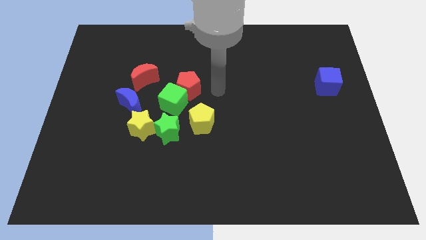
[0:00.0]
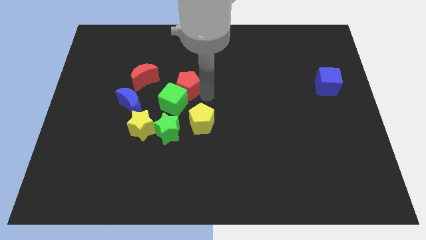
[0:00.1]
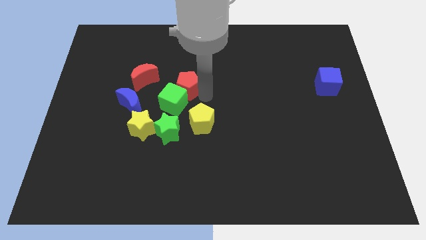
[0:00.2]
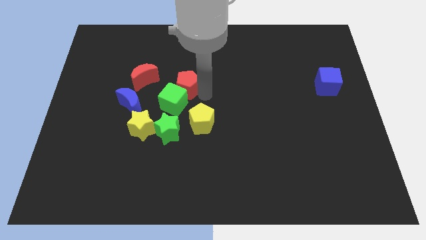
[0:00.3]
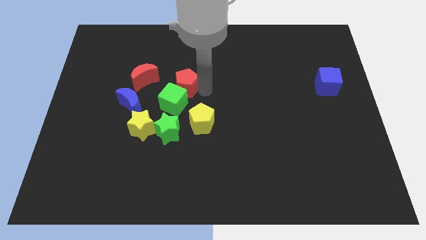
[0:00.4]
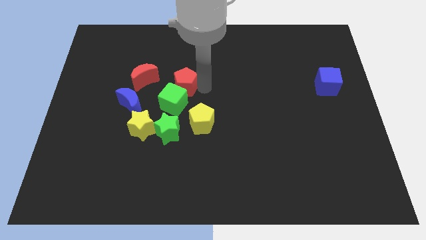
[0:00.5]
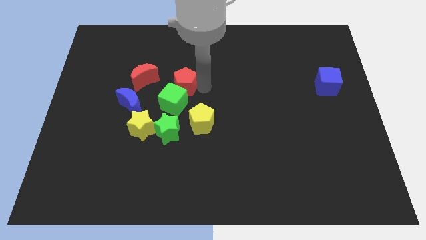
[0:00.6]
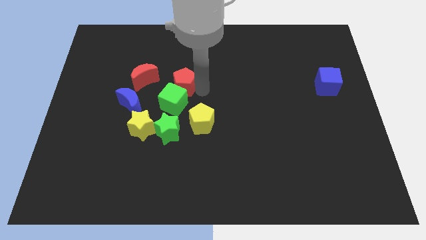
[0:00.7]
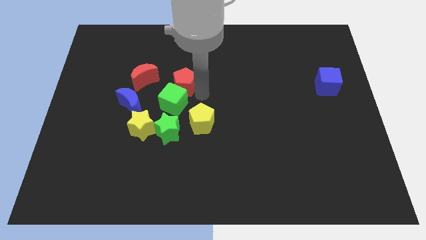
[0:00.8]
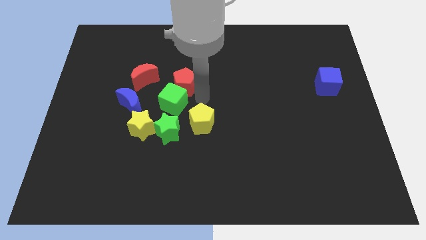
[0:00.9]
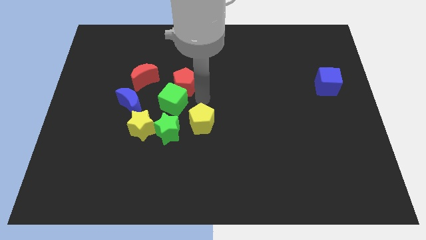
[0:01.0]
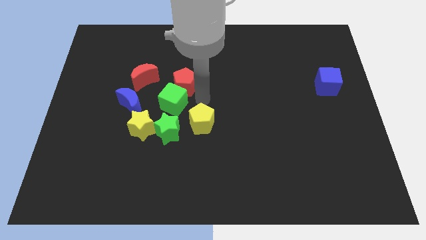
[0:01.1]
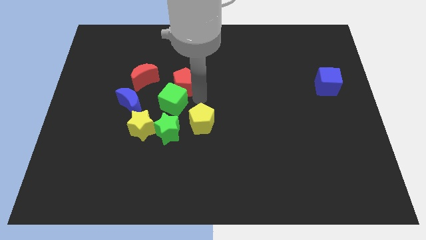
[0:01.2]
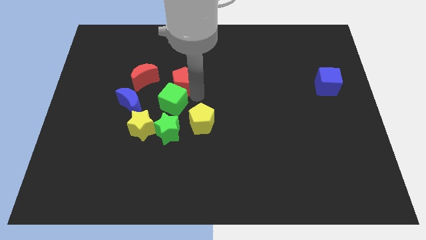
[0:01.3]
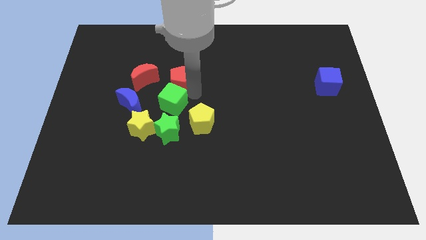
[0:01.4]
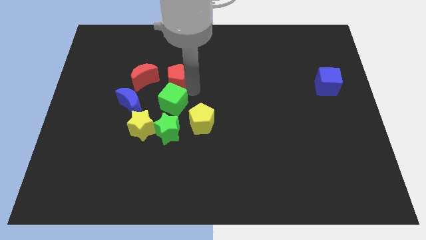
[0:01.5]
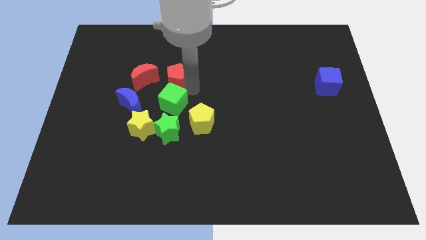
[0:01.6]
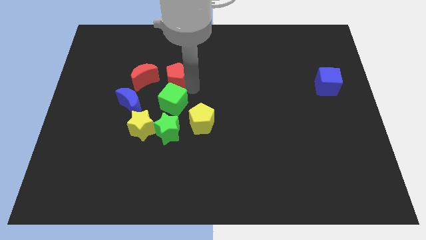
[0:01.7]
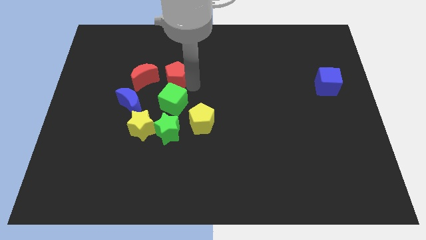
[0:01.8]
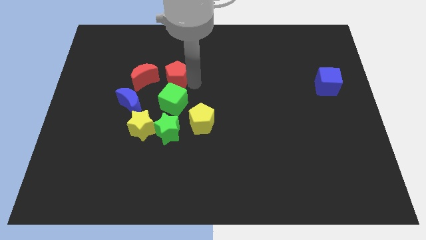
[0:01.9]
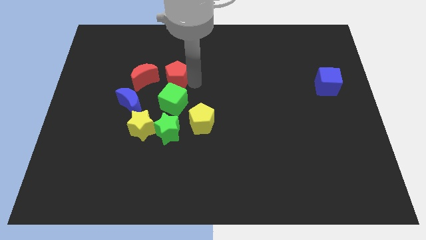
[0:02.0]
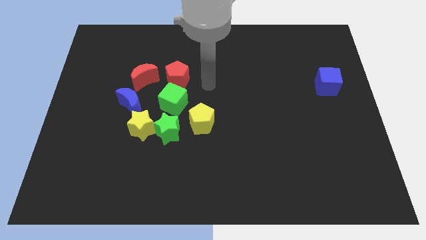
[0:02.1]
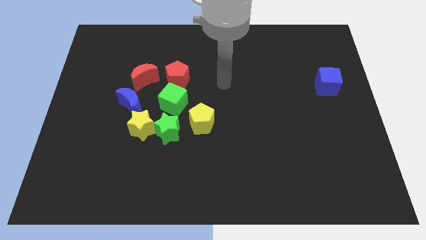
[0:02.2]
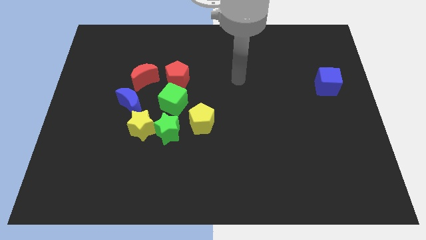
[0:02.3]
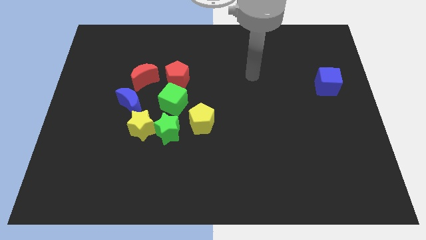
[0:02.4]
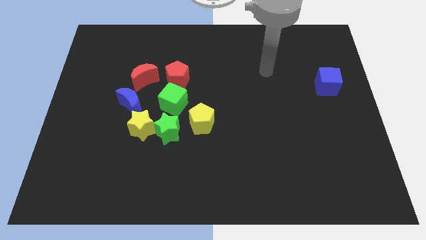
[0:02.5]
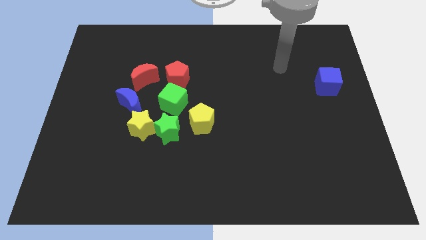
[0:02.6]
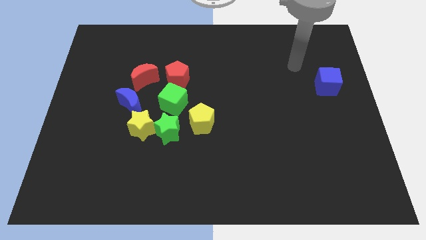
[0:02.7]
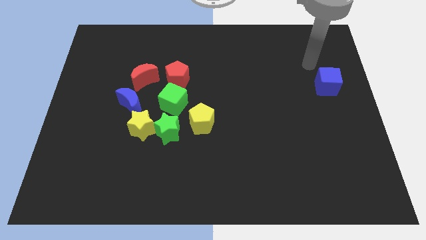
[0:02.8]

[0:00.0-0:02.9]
move the red pentagon towards the right side of red moon

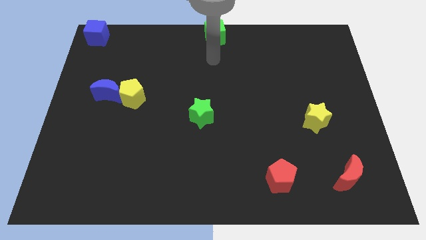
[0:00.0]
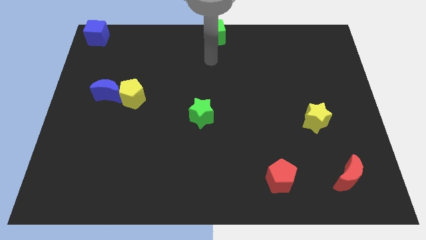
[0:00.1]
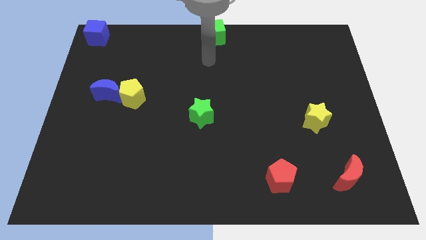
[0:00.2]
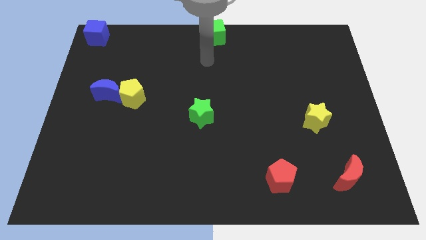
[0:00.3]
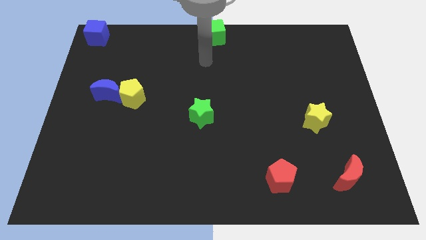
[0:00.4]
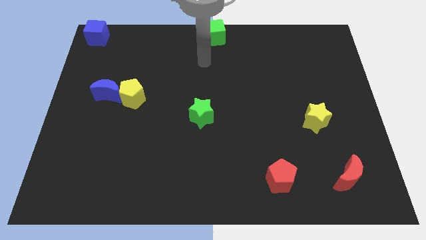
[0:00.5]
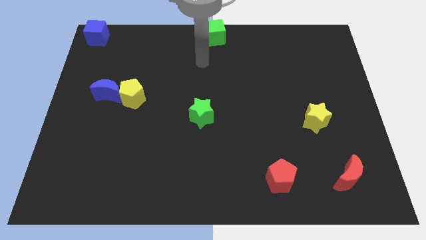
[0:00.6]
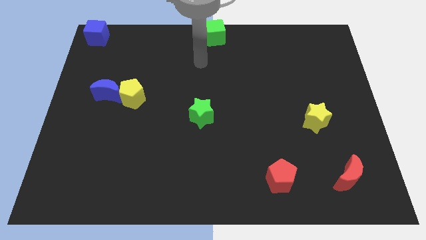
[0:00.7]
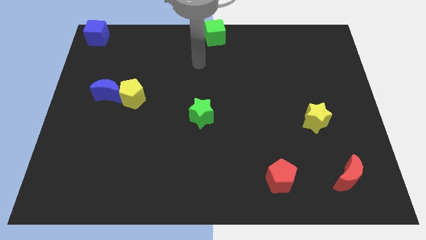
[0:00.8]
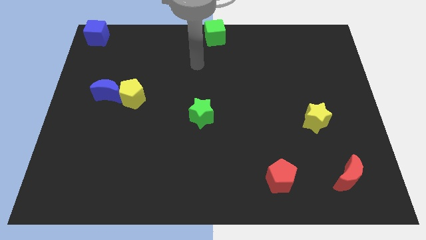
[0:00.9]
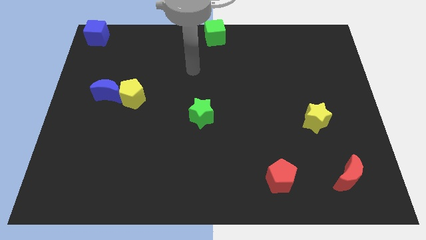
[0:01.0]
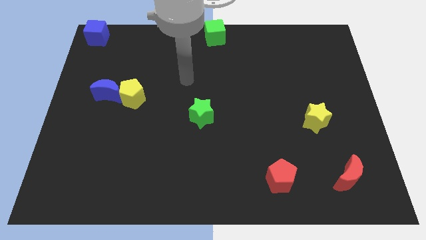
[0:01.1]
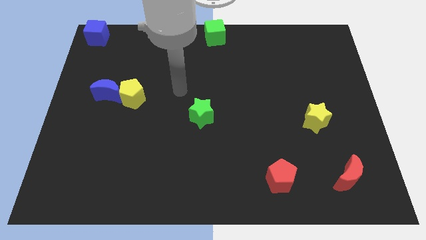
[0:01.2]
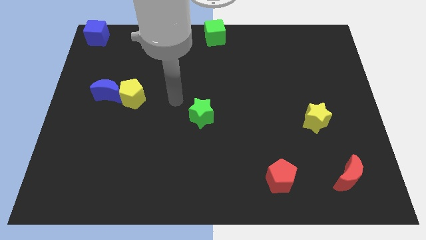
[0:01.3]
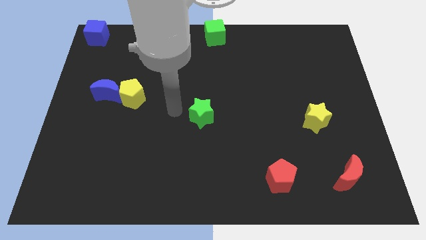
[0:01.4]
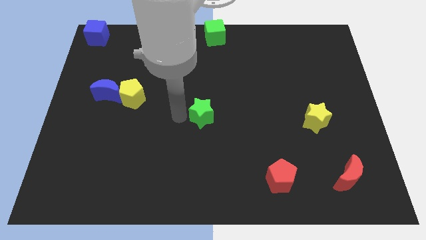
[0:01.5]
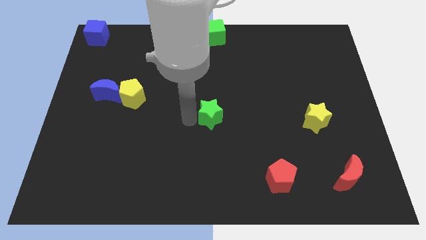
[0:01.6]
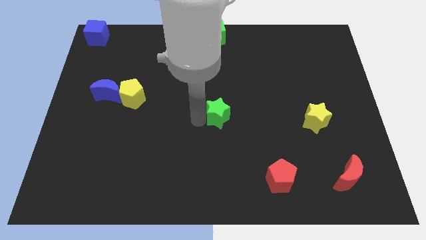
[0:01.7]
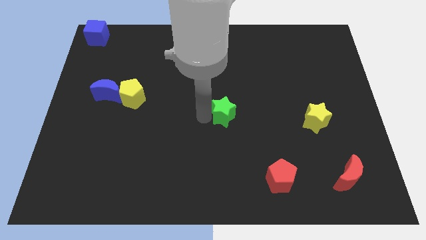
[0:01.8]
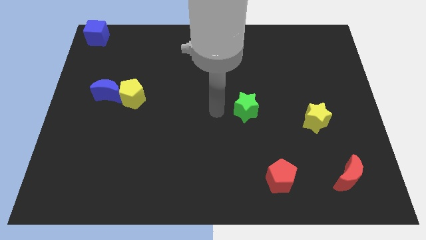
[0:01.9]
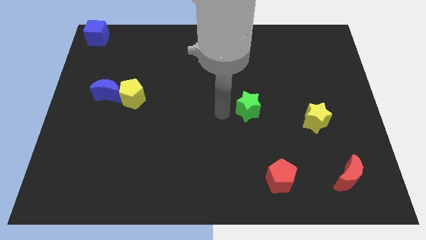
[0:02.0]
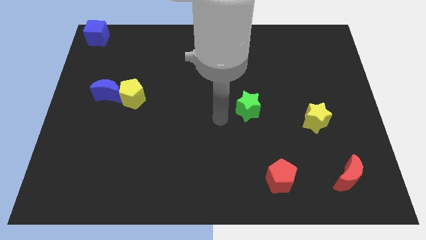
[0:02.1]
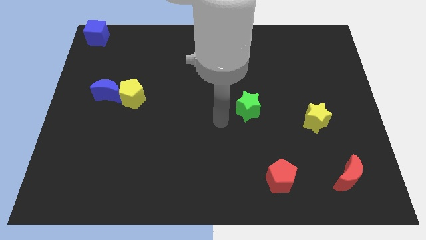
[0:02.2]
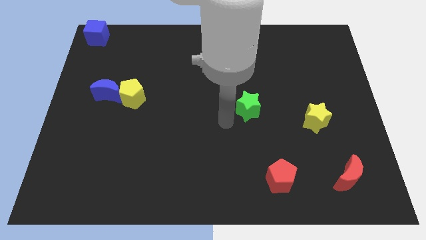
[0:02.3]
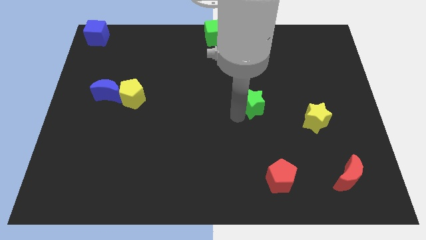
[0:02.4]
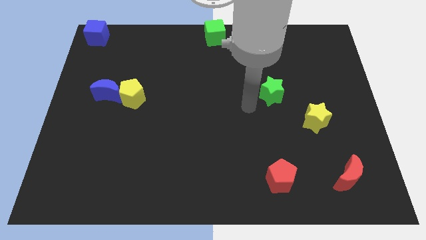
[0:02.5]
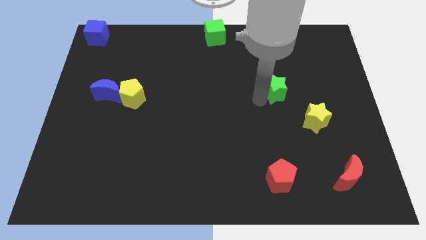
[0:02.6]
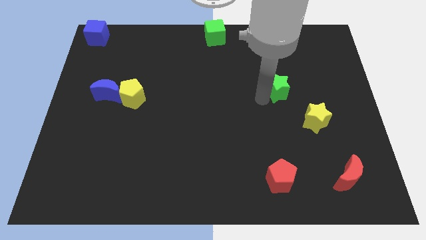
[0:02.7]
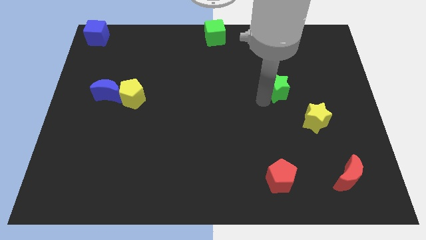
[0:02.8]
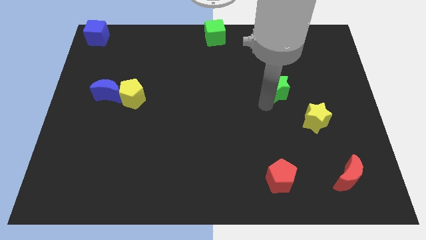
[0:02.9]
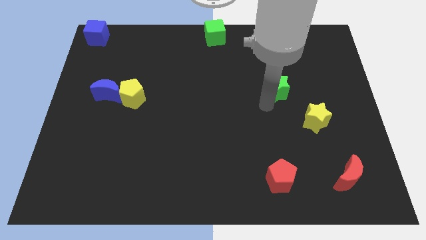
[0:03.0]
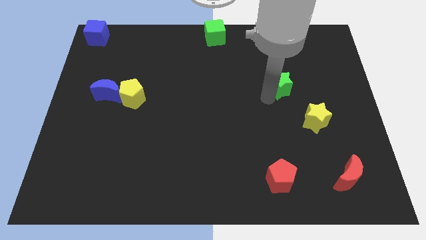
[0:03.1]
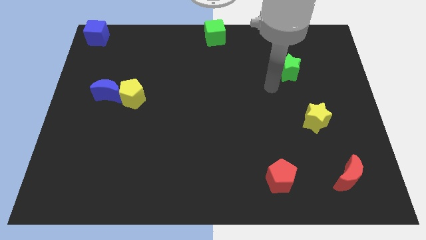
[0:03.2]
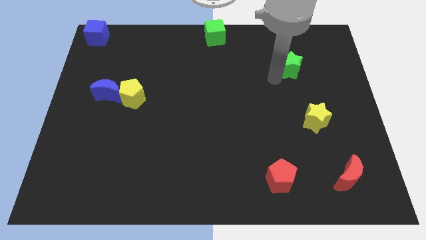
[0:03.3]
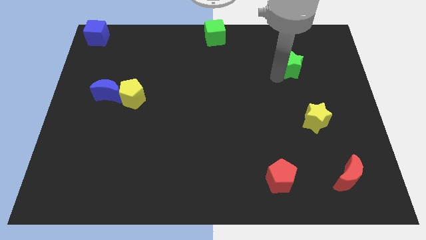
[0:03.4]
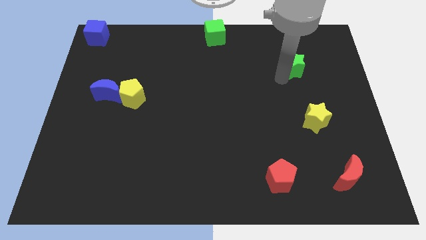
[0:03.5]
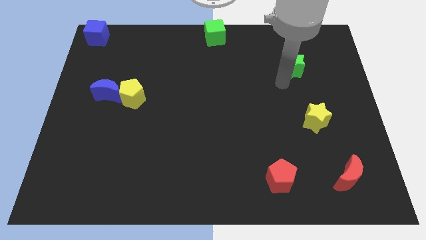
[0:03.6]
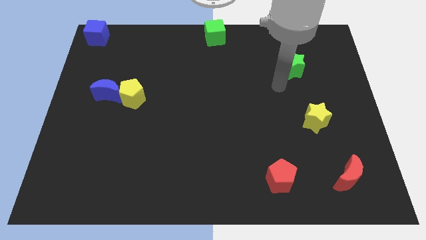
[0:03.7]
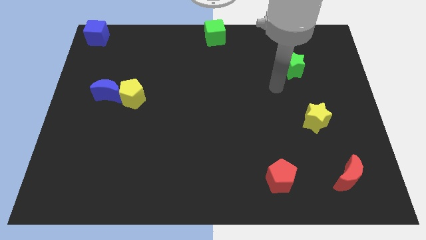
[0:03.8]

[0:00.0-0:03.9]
move the green star at the top right of the green cube

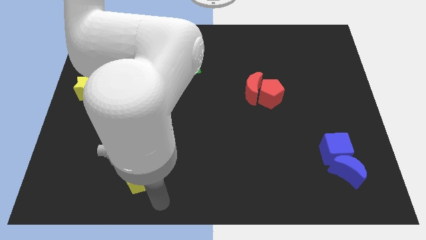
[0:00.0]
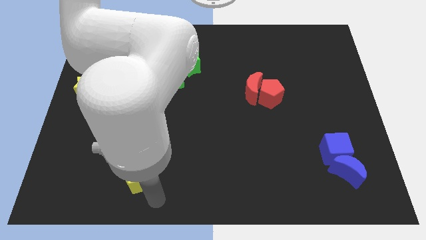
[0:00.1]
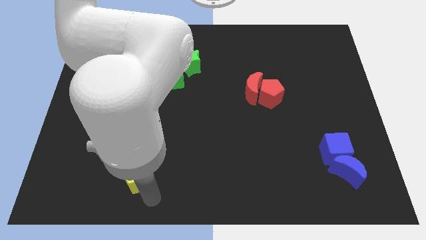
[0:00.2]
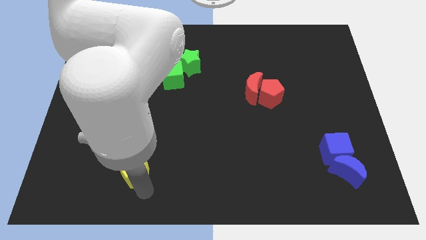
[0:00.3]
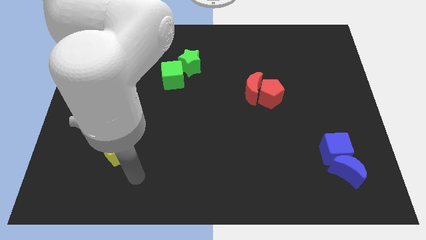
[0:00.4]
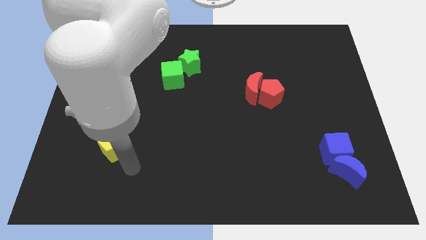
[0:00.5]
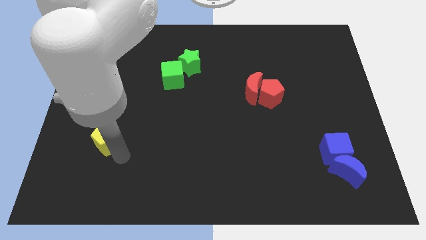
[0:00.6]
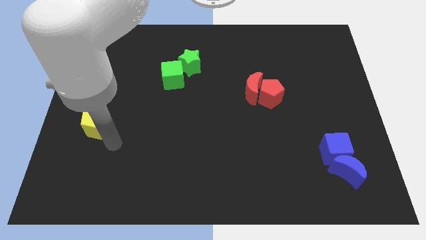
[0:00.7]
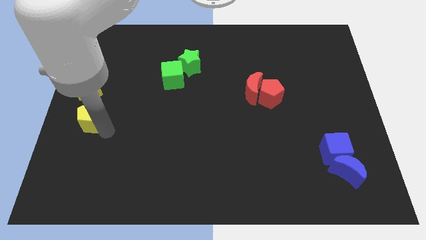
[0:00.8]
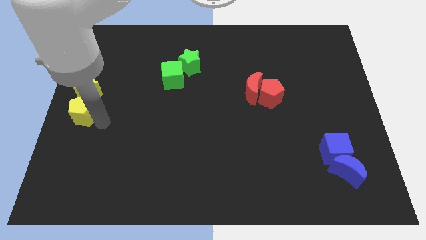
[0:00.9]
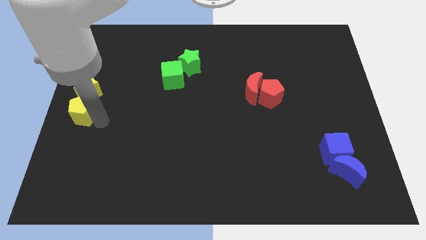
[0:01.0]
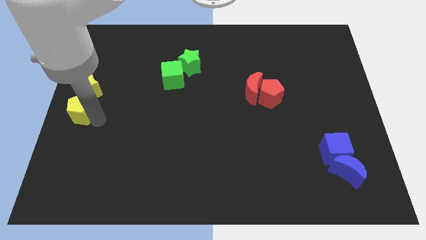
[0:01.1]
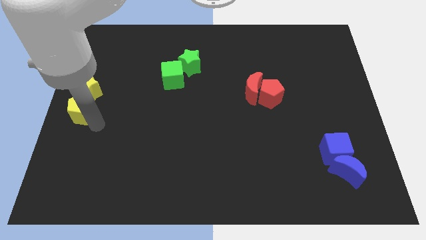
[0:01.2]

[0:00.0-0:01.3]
move the yellow pentagon to the bottom of the yellow star

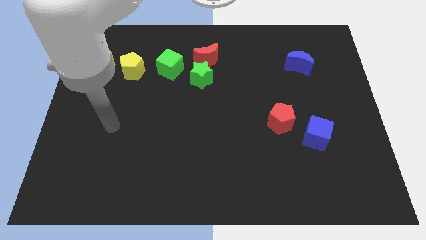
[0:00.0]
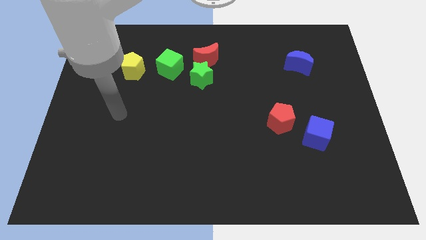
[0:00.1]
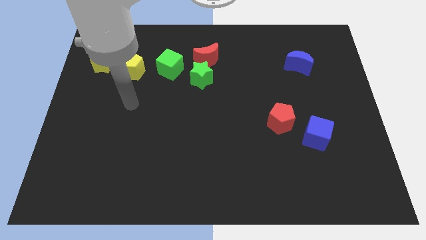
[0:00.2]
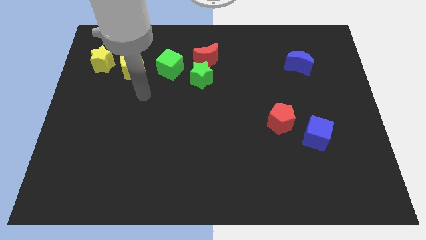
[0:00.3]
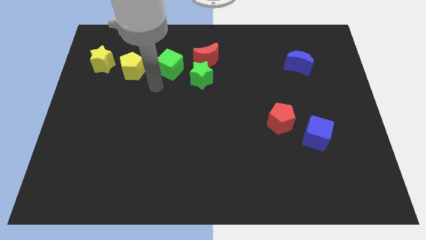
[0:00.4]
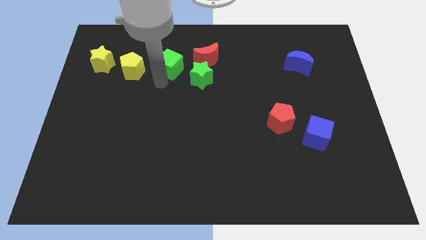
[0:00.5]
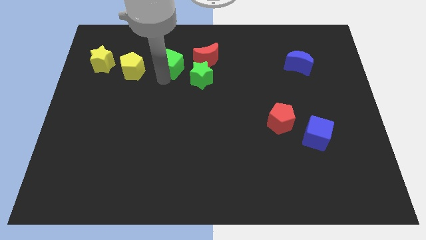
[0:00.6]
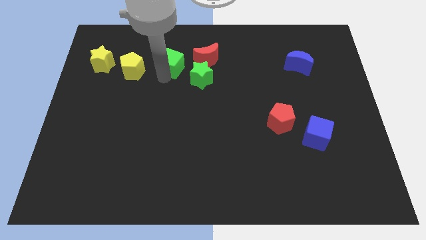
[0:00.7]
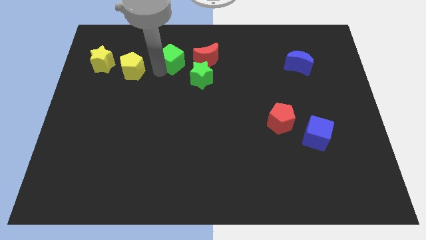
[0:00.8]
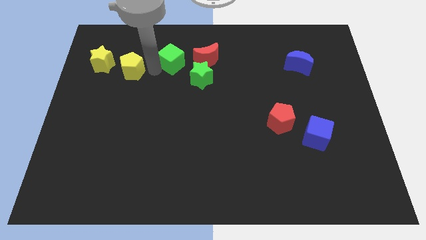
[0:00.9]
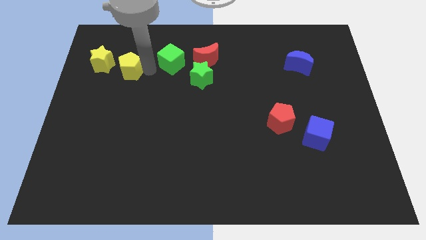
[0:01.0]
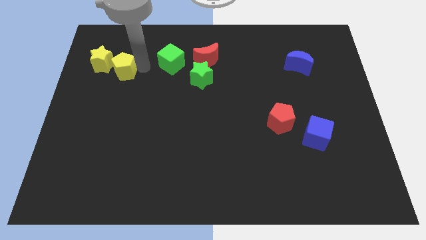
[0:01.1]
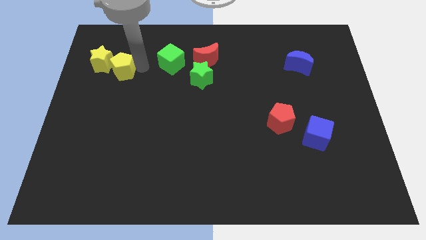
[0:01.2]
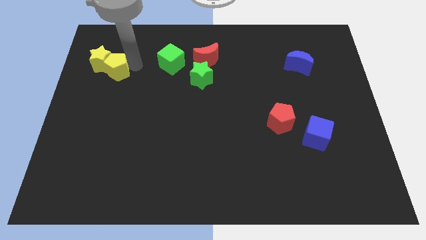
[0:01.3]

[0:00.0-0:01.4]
move the yellow pentagon close to the yellow star
